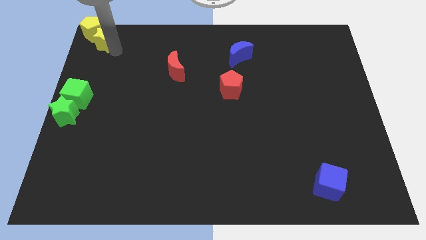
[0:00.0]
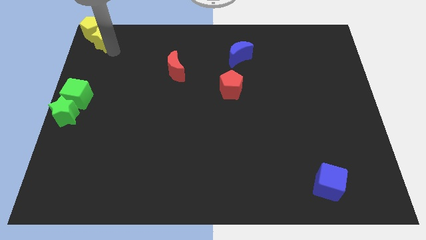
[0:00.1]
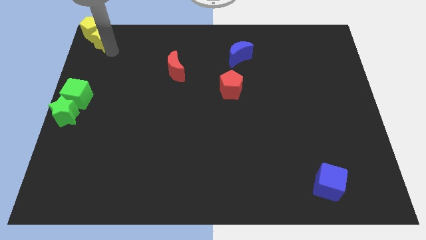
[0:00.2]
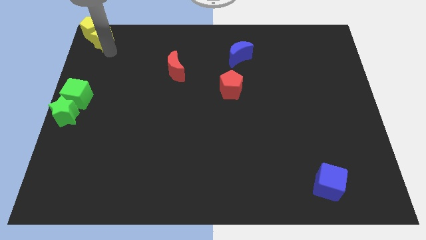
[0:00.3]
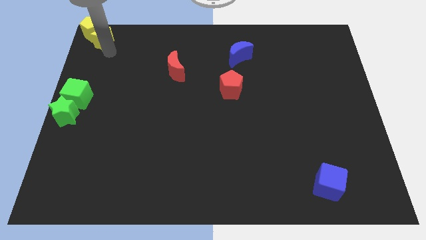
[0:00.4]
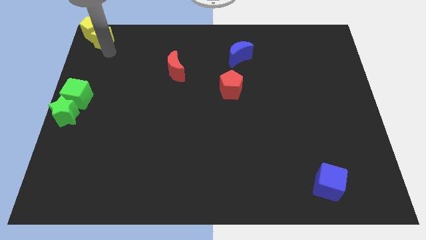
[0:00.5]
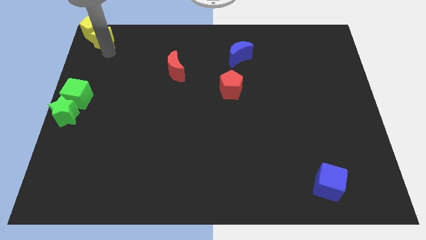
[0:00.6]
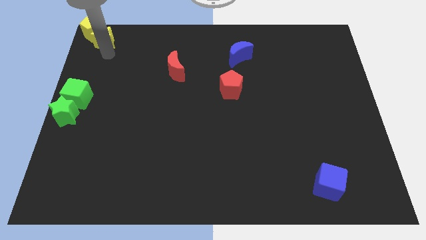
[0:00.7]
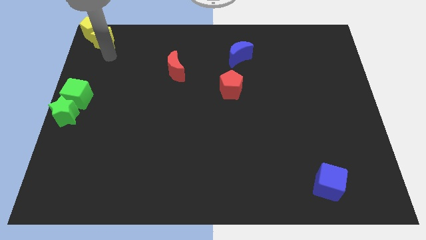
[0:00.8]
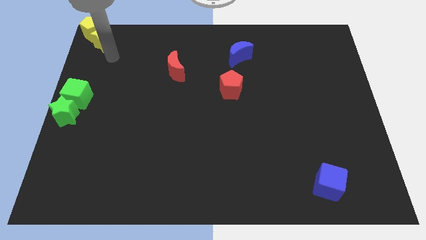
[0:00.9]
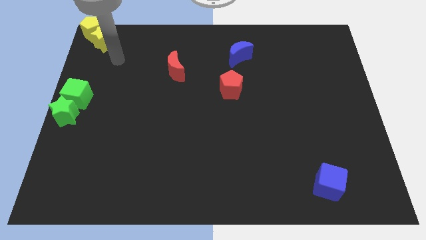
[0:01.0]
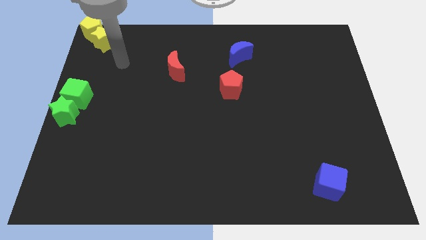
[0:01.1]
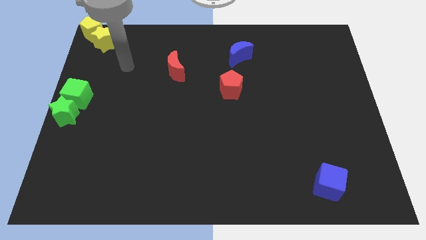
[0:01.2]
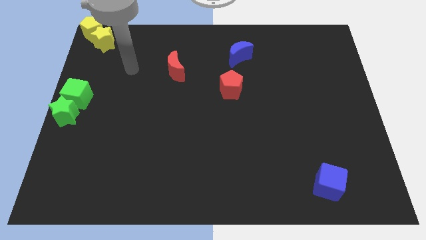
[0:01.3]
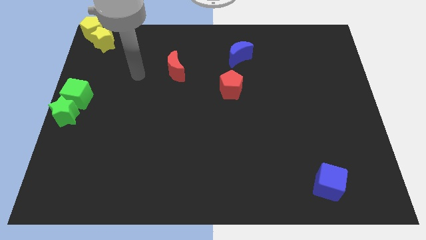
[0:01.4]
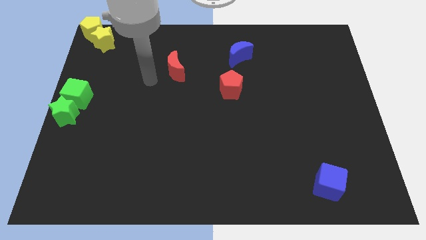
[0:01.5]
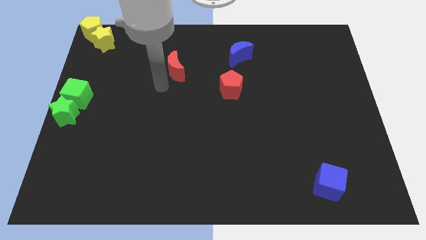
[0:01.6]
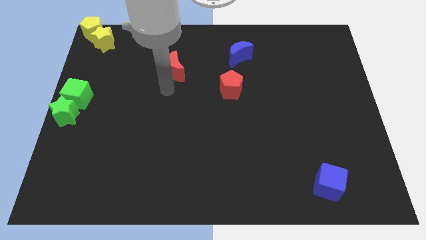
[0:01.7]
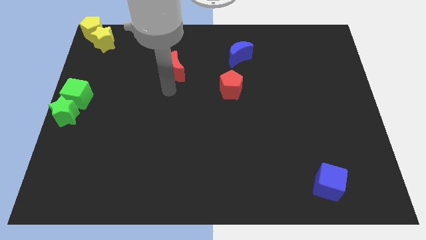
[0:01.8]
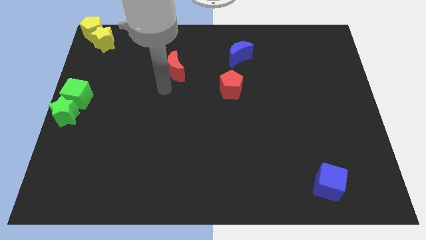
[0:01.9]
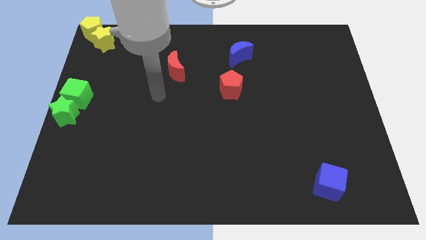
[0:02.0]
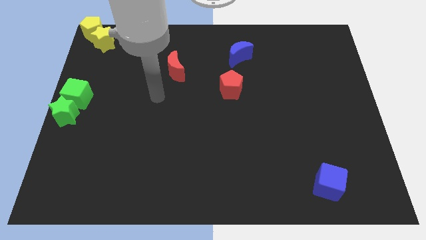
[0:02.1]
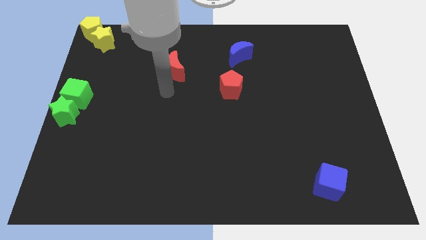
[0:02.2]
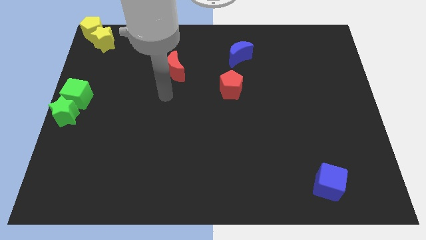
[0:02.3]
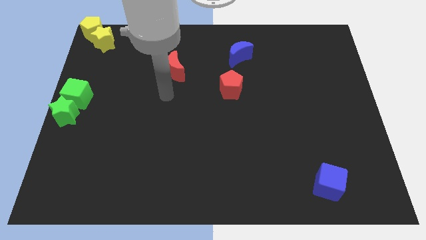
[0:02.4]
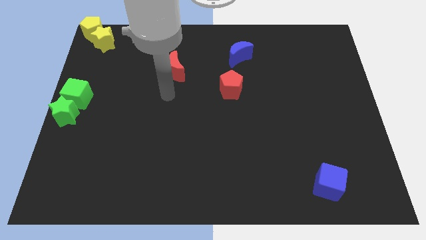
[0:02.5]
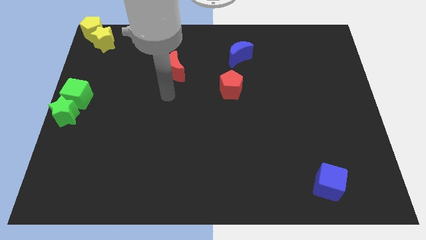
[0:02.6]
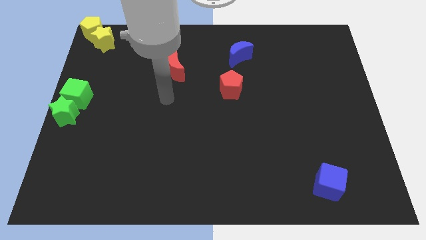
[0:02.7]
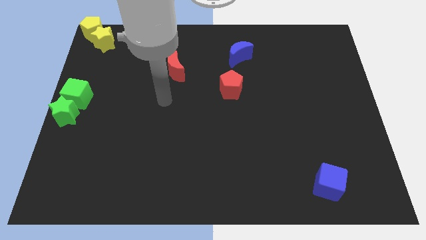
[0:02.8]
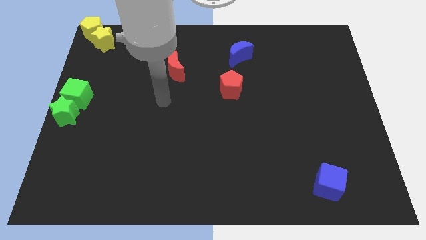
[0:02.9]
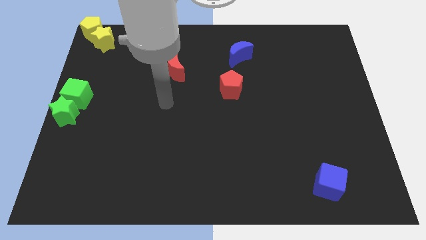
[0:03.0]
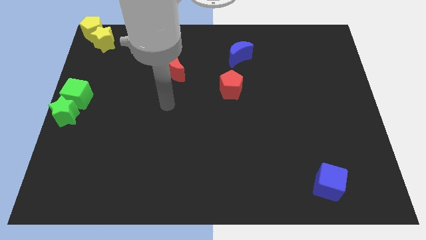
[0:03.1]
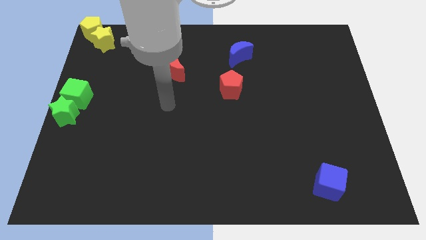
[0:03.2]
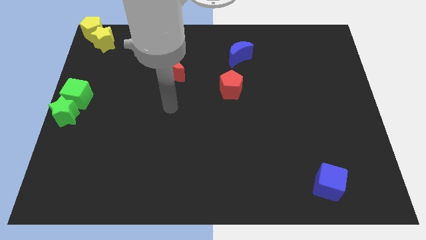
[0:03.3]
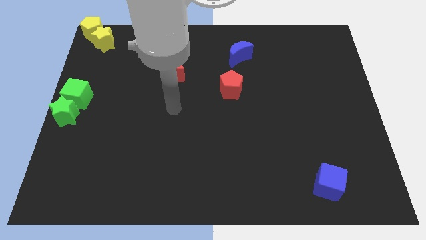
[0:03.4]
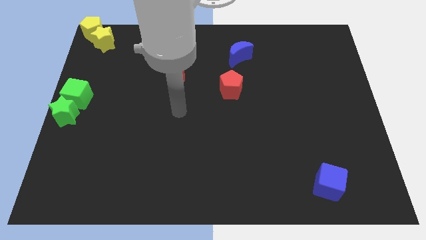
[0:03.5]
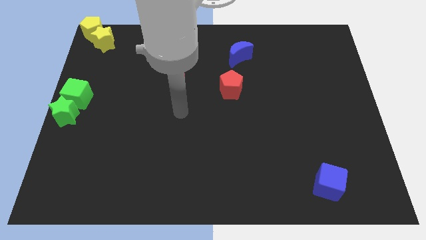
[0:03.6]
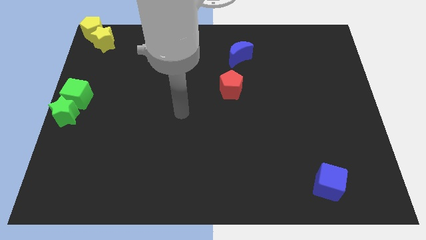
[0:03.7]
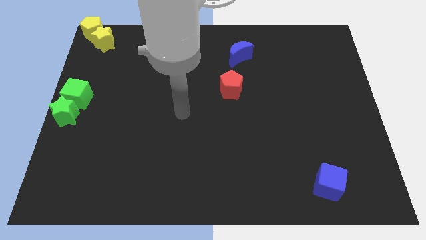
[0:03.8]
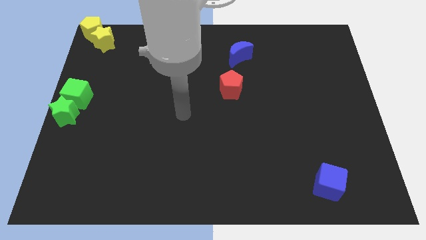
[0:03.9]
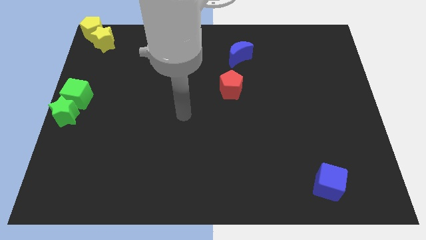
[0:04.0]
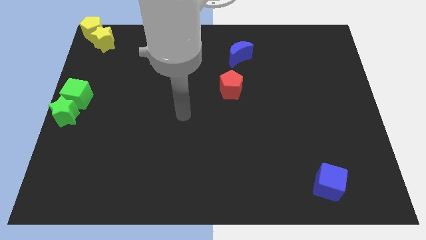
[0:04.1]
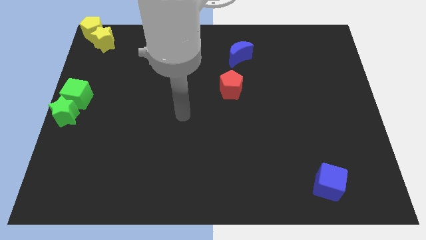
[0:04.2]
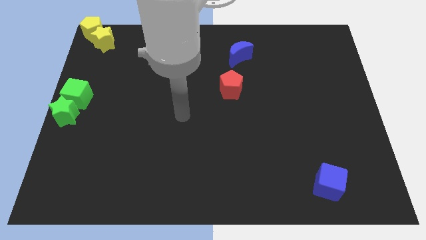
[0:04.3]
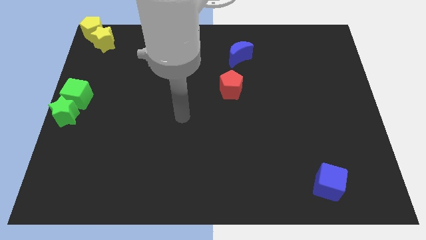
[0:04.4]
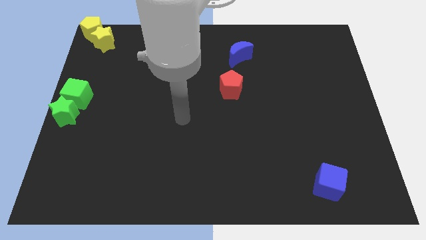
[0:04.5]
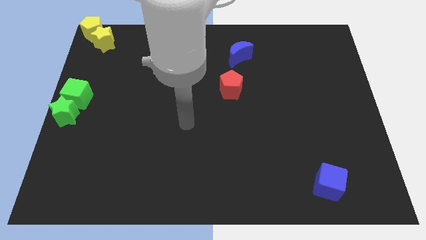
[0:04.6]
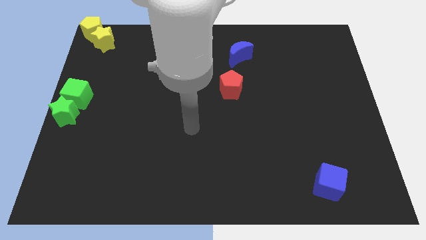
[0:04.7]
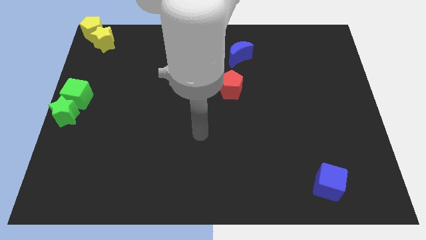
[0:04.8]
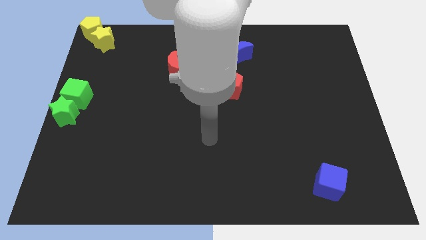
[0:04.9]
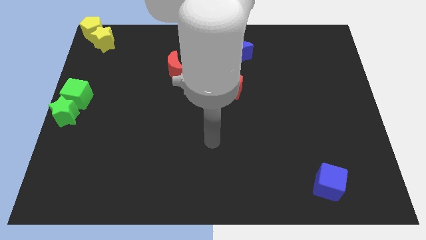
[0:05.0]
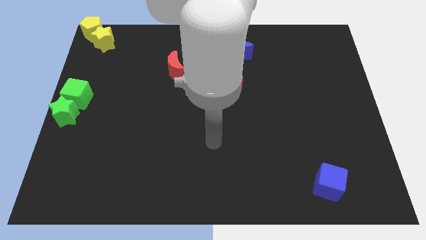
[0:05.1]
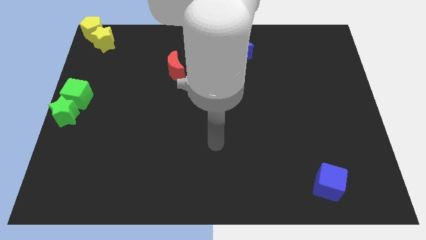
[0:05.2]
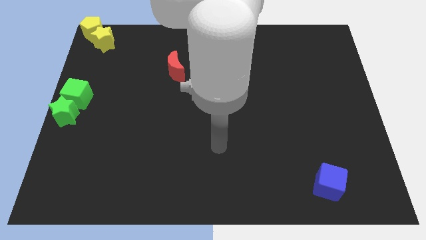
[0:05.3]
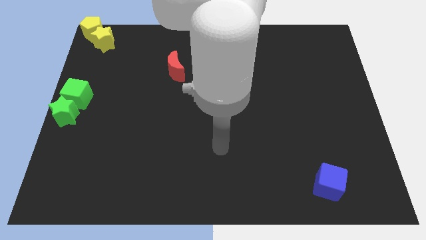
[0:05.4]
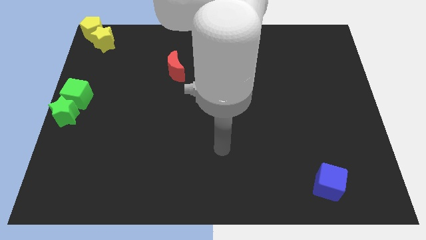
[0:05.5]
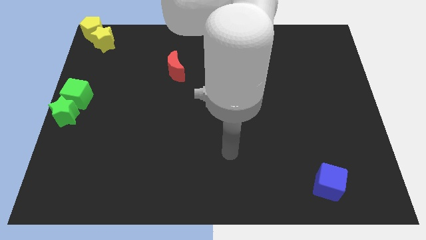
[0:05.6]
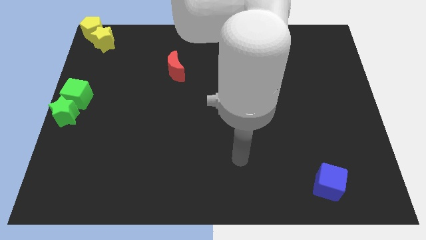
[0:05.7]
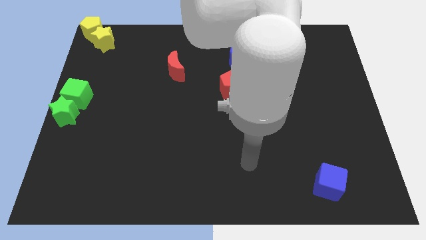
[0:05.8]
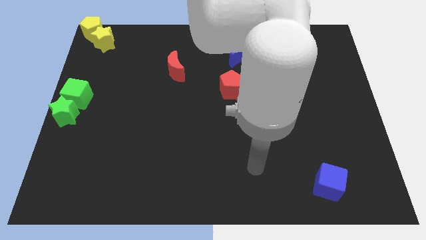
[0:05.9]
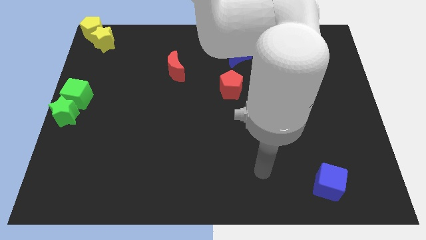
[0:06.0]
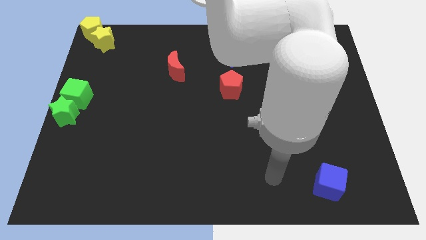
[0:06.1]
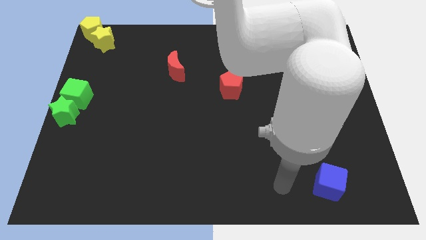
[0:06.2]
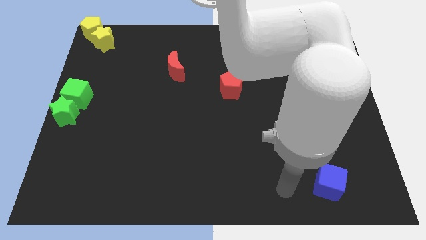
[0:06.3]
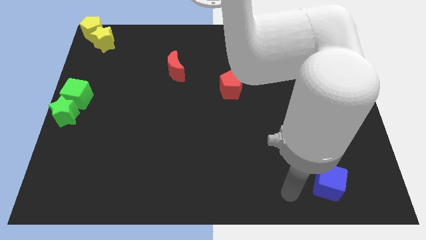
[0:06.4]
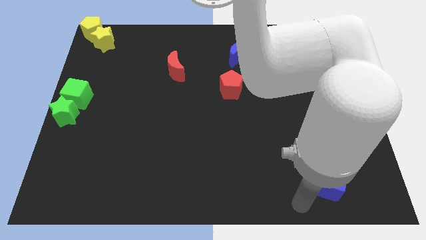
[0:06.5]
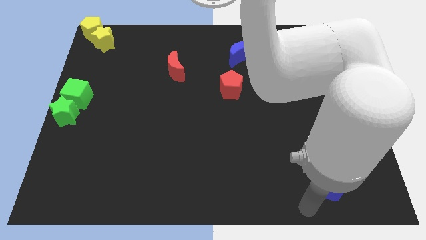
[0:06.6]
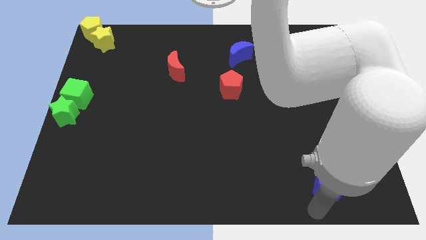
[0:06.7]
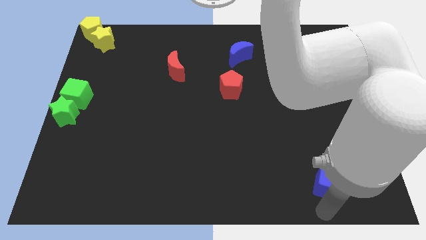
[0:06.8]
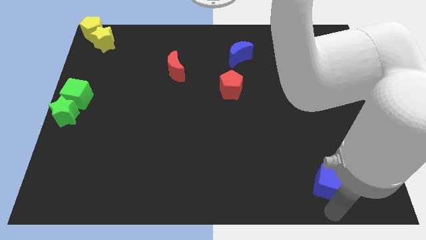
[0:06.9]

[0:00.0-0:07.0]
place the arm down to the blue cube

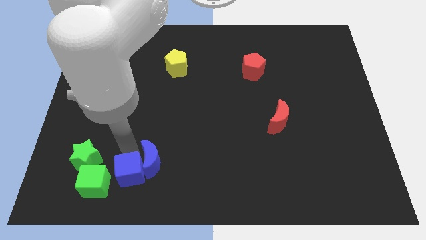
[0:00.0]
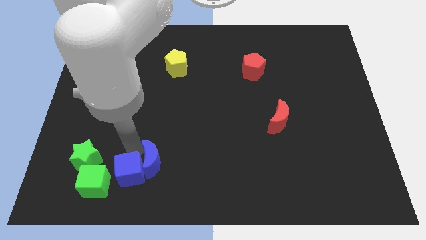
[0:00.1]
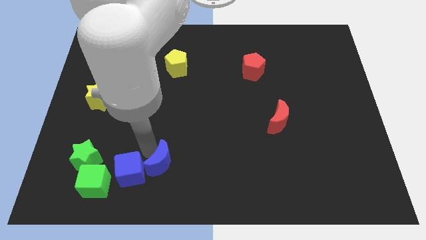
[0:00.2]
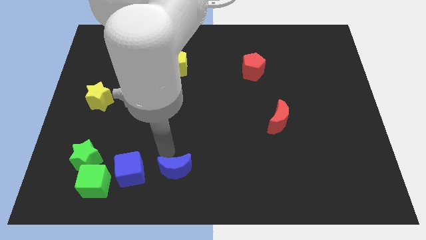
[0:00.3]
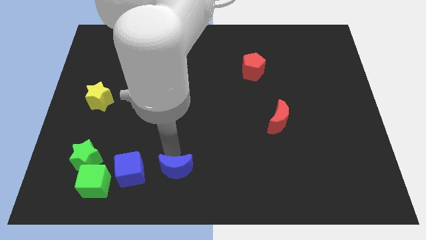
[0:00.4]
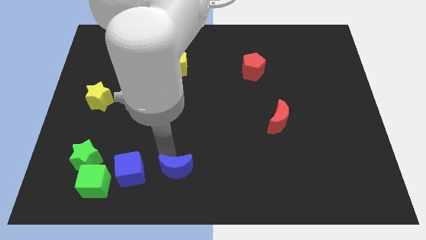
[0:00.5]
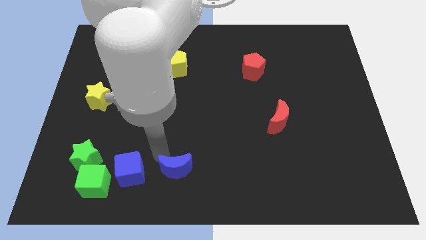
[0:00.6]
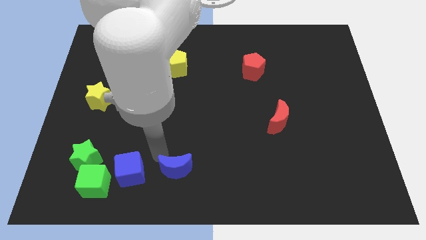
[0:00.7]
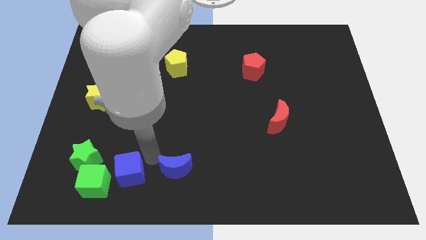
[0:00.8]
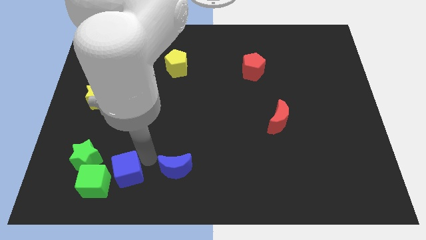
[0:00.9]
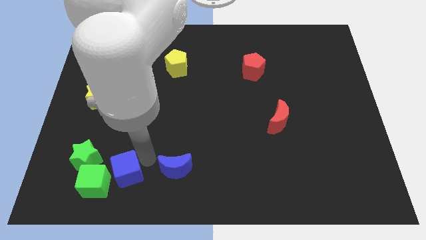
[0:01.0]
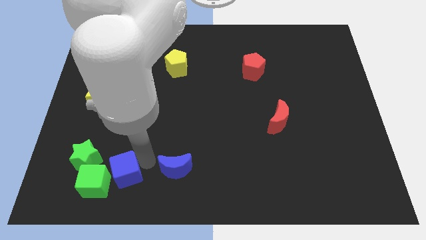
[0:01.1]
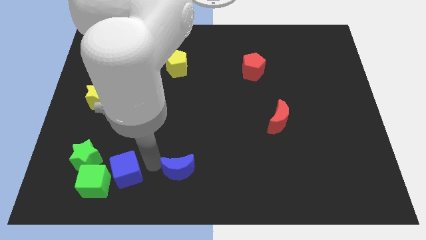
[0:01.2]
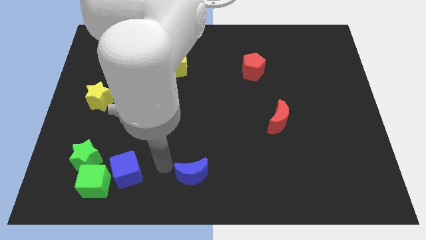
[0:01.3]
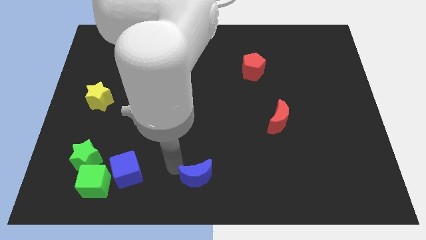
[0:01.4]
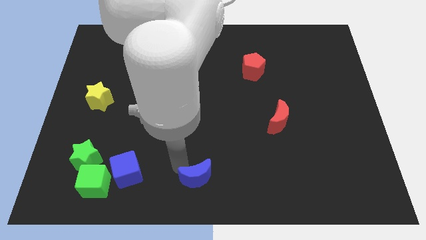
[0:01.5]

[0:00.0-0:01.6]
push the blue crescent to the bottom center of the board

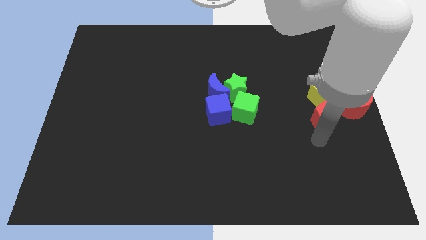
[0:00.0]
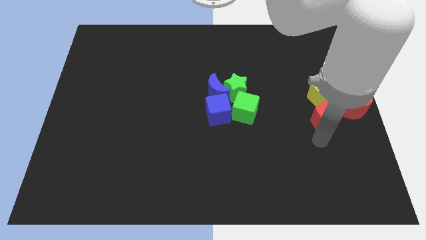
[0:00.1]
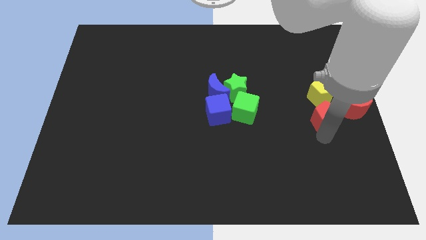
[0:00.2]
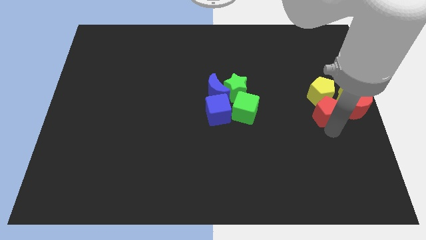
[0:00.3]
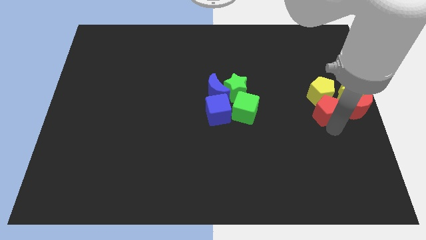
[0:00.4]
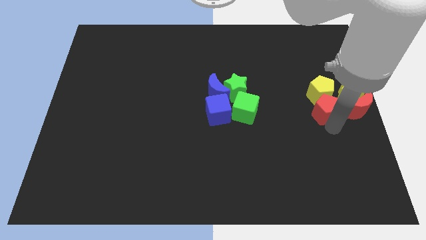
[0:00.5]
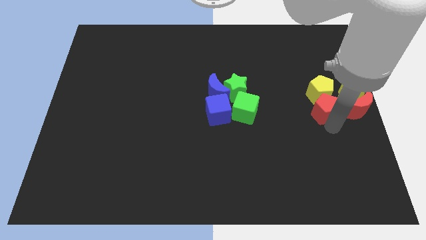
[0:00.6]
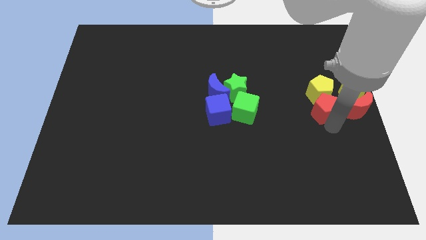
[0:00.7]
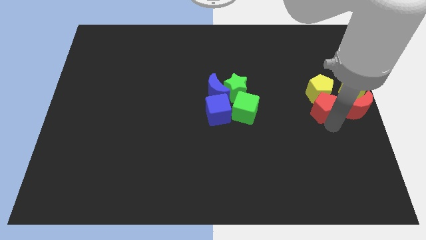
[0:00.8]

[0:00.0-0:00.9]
move the red pentagon left to the red crescent
